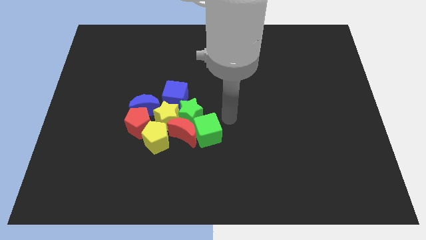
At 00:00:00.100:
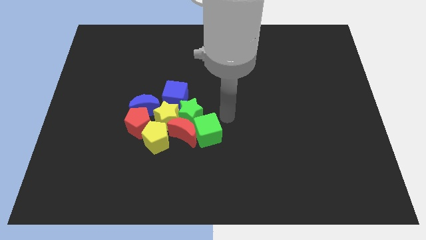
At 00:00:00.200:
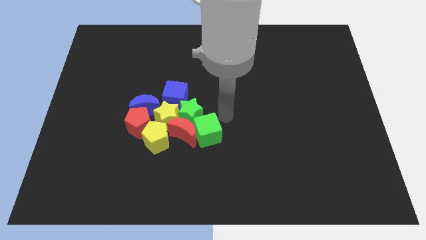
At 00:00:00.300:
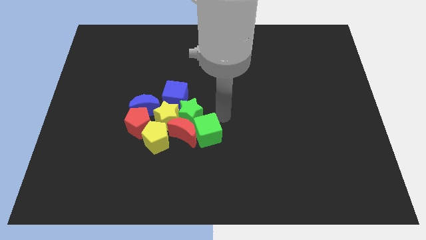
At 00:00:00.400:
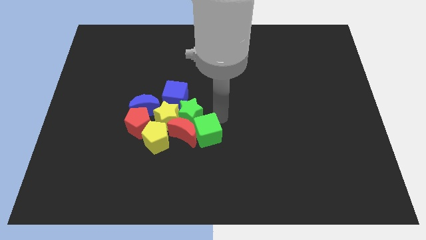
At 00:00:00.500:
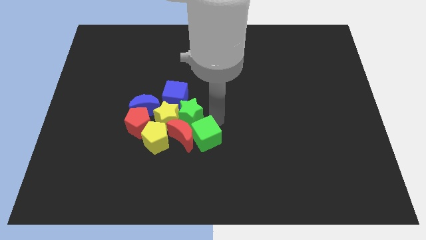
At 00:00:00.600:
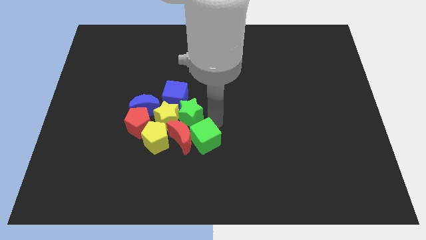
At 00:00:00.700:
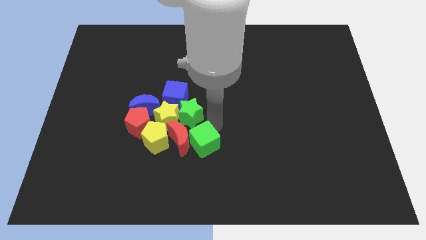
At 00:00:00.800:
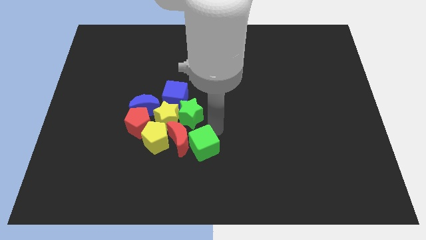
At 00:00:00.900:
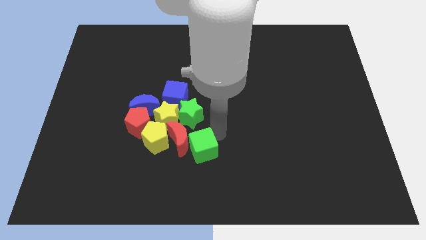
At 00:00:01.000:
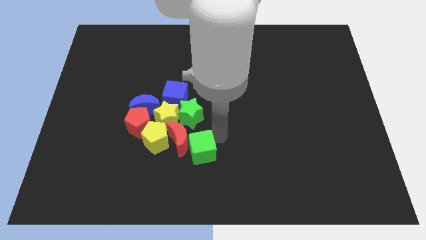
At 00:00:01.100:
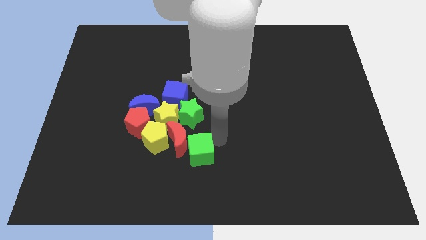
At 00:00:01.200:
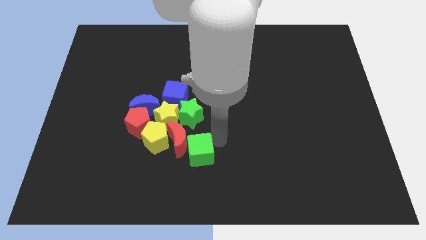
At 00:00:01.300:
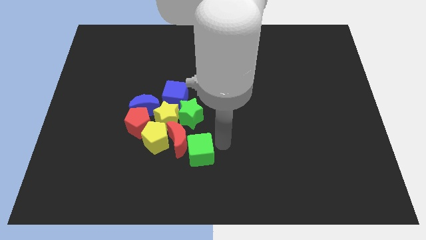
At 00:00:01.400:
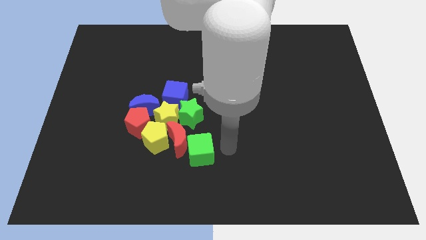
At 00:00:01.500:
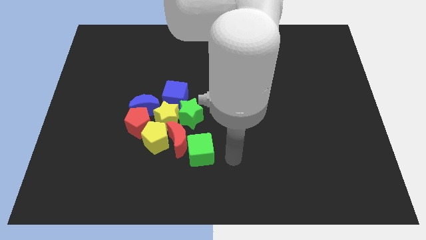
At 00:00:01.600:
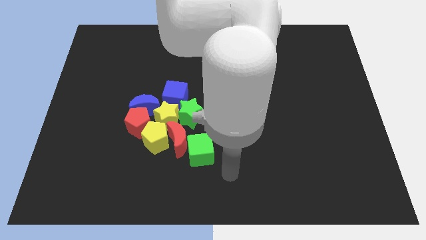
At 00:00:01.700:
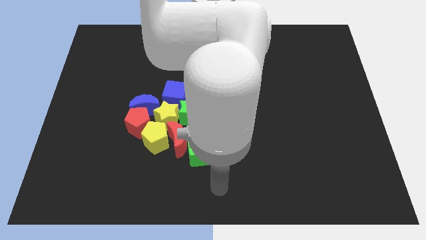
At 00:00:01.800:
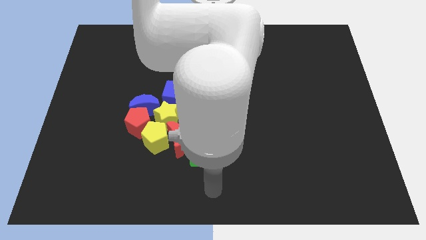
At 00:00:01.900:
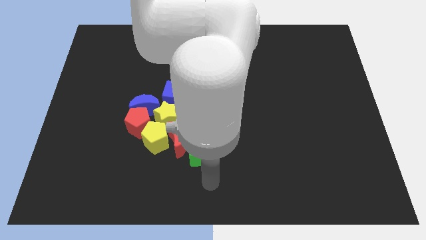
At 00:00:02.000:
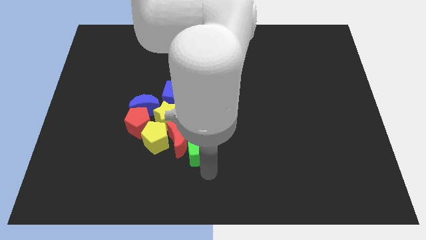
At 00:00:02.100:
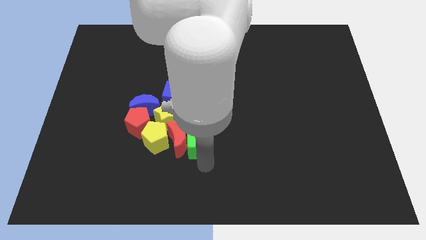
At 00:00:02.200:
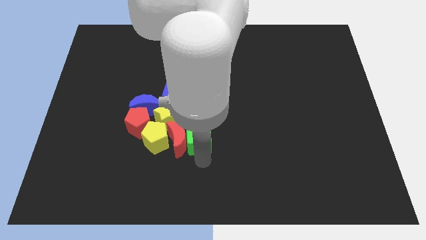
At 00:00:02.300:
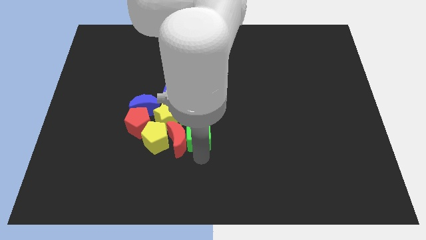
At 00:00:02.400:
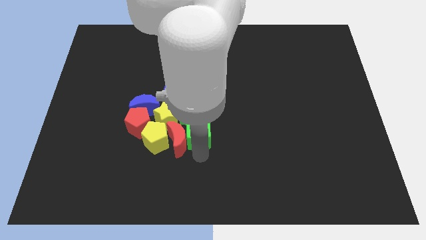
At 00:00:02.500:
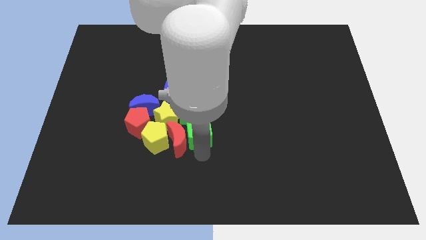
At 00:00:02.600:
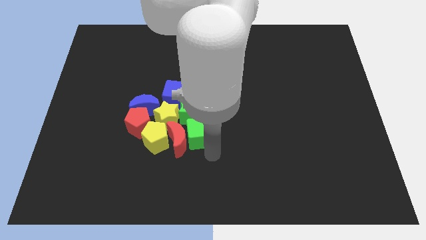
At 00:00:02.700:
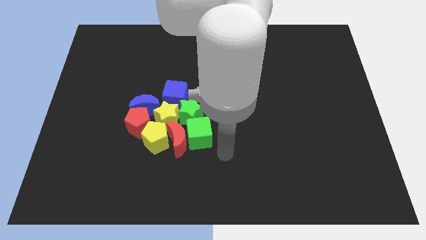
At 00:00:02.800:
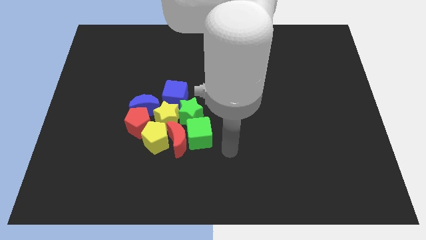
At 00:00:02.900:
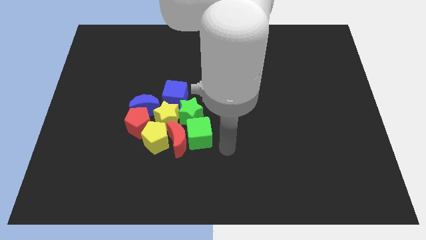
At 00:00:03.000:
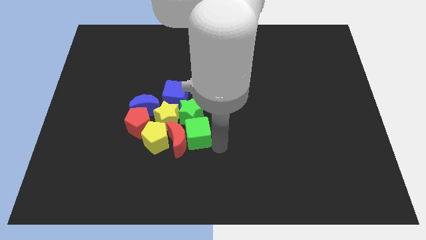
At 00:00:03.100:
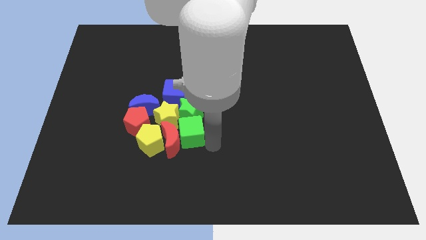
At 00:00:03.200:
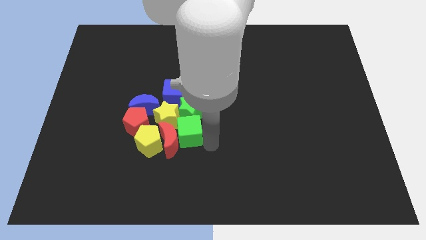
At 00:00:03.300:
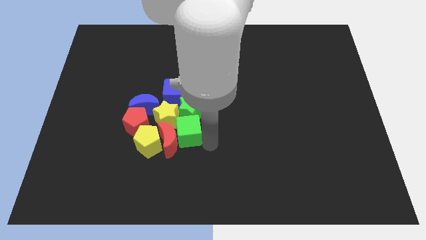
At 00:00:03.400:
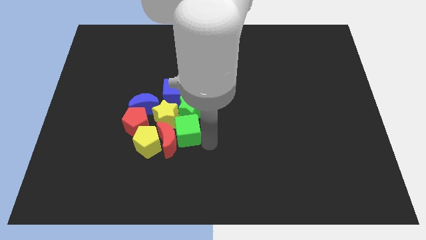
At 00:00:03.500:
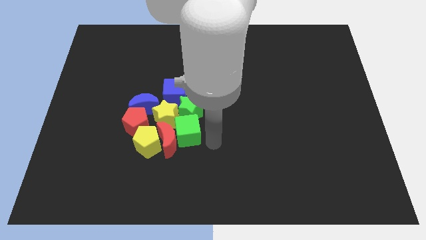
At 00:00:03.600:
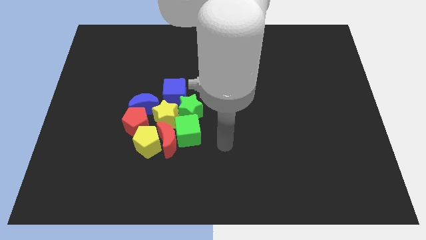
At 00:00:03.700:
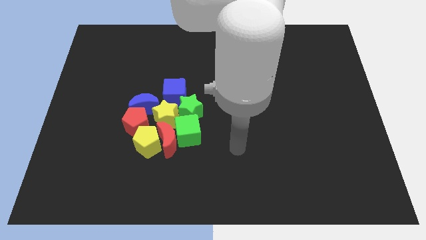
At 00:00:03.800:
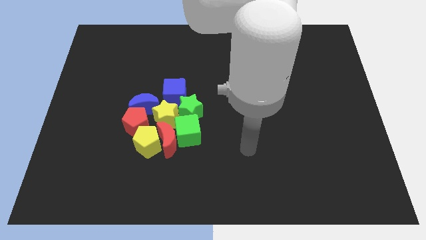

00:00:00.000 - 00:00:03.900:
push the green cube into the group of objects

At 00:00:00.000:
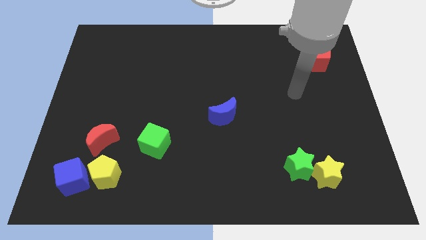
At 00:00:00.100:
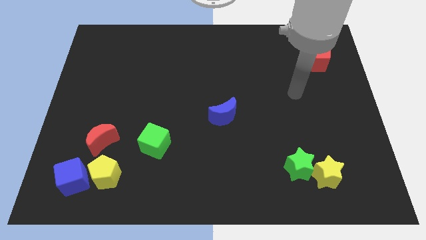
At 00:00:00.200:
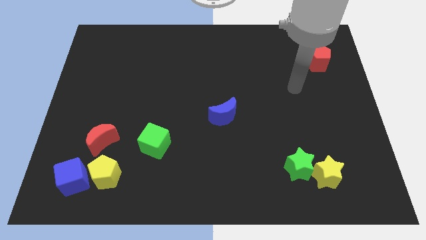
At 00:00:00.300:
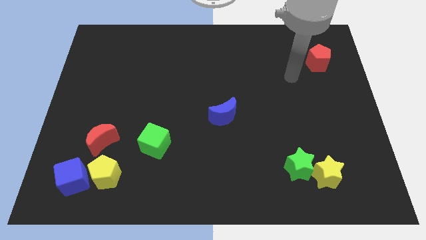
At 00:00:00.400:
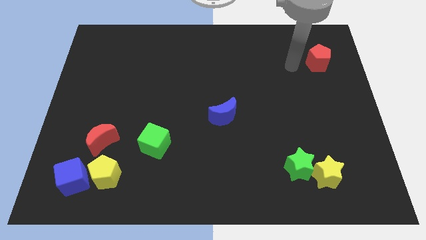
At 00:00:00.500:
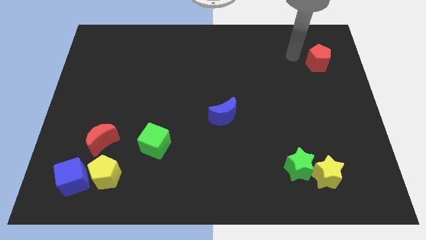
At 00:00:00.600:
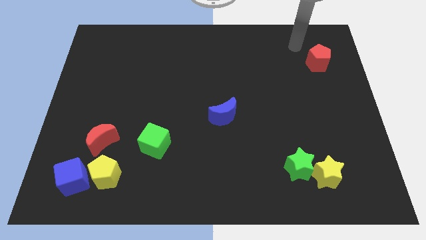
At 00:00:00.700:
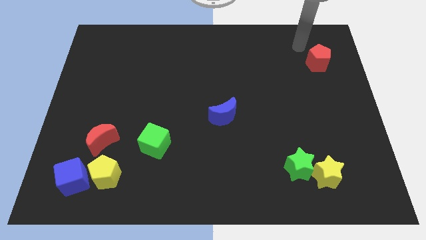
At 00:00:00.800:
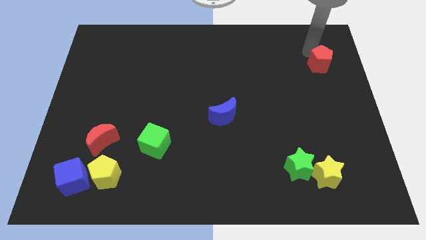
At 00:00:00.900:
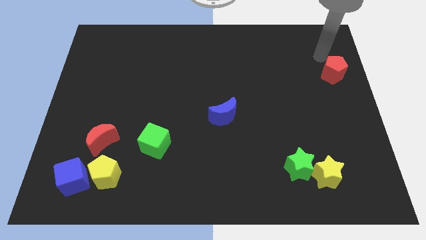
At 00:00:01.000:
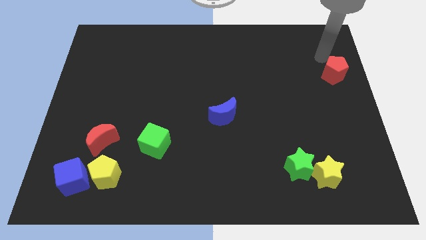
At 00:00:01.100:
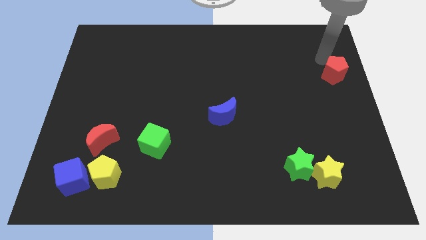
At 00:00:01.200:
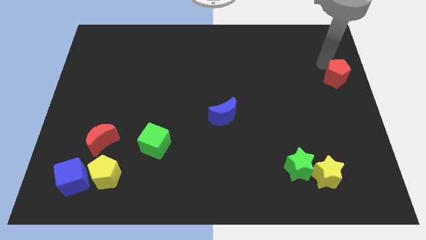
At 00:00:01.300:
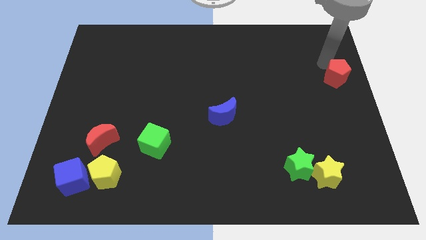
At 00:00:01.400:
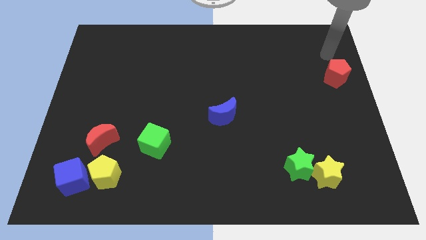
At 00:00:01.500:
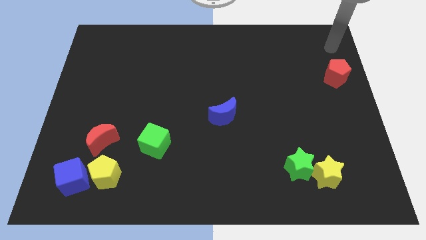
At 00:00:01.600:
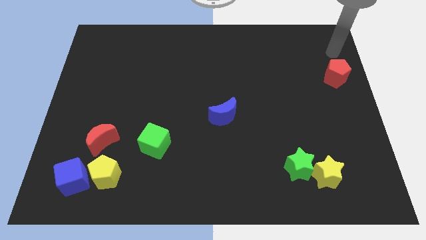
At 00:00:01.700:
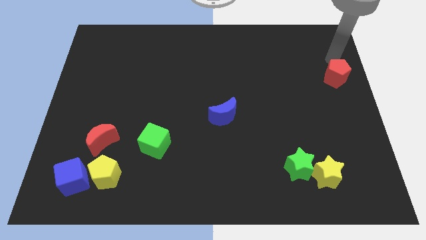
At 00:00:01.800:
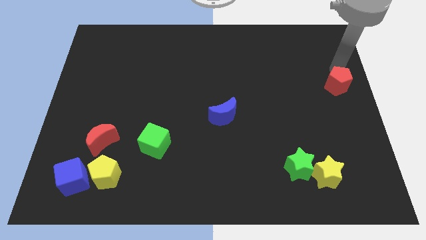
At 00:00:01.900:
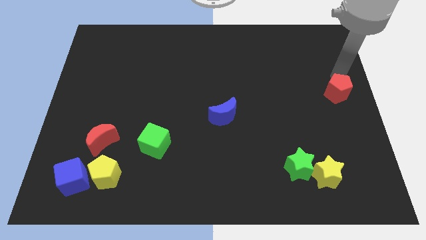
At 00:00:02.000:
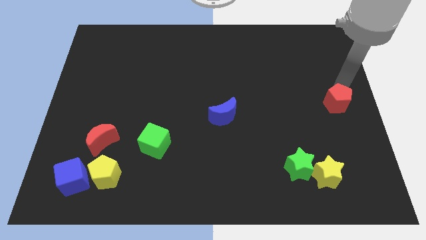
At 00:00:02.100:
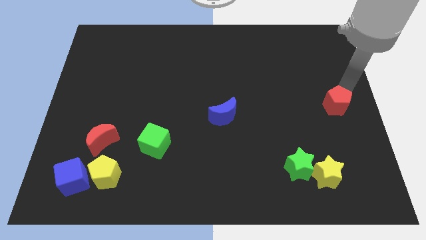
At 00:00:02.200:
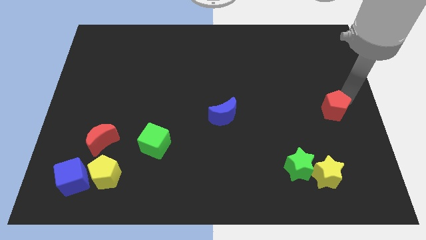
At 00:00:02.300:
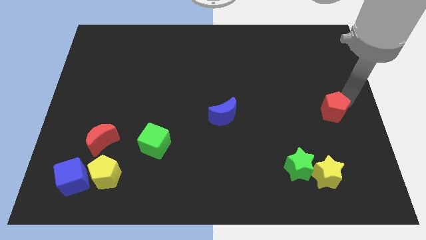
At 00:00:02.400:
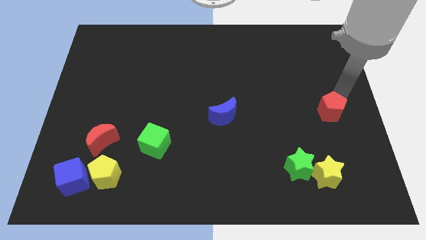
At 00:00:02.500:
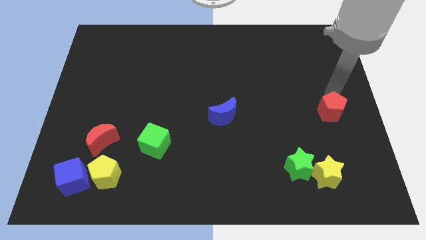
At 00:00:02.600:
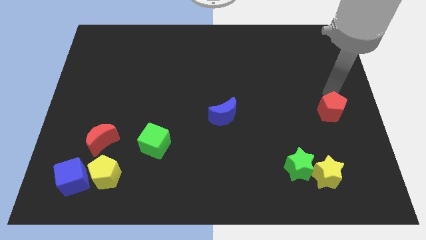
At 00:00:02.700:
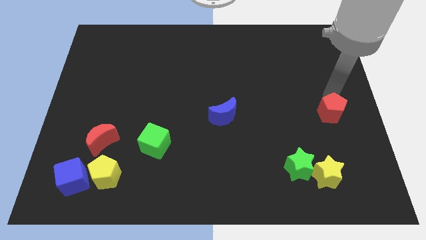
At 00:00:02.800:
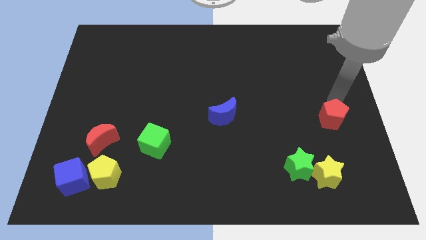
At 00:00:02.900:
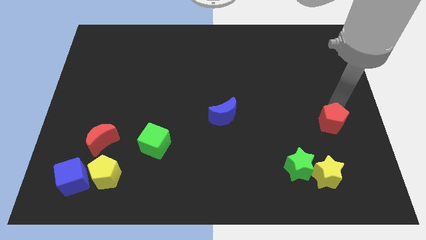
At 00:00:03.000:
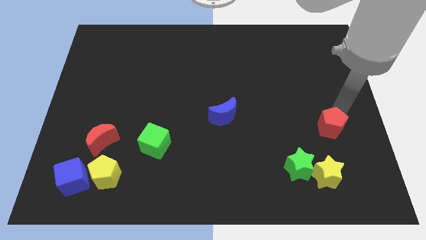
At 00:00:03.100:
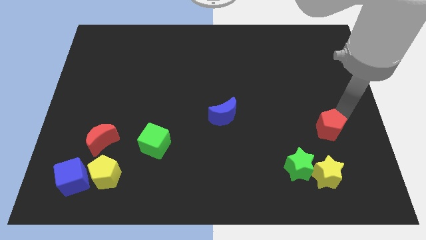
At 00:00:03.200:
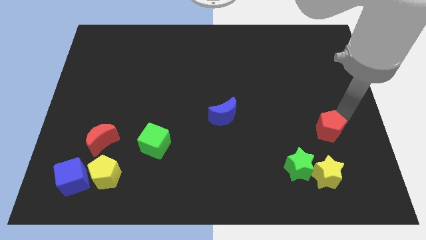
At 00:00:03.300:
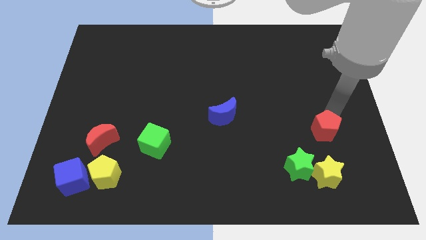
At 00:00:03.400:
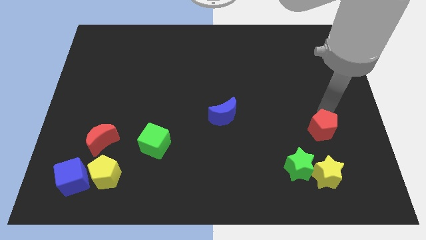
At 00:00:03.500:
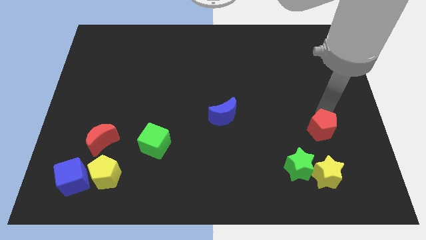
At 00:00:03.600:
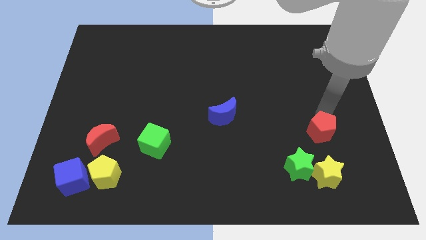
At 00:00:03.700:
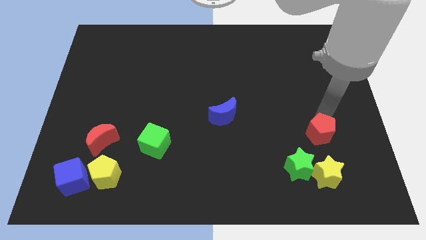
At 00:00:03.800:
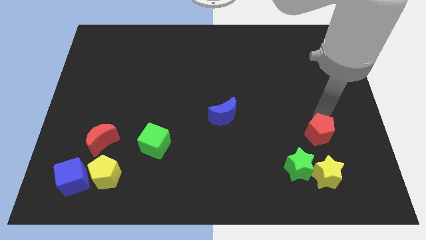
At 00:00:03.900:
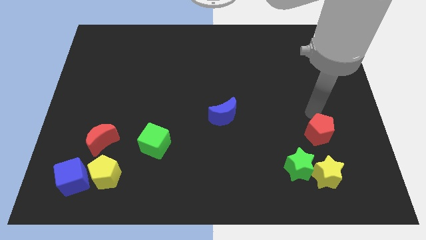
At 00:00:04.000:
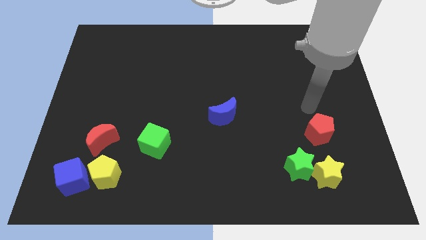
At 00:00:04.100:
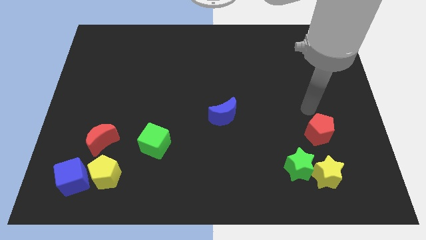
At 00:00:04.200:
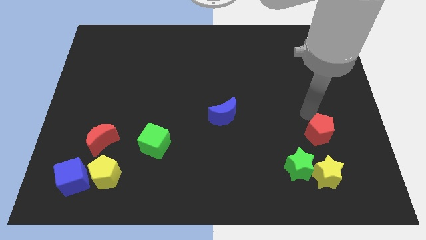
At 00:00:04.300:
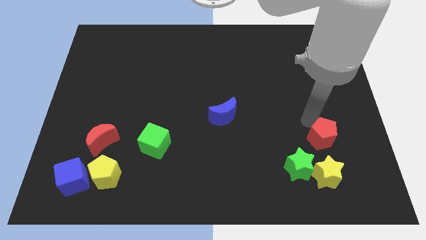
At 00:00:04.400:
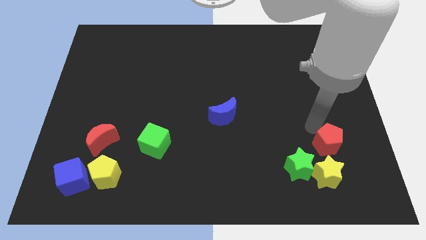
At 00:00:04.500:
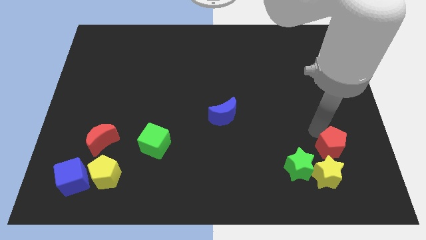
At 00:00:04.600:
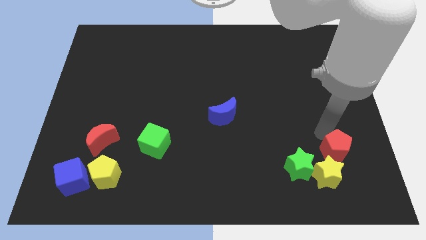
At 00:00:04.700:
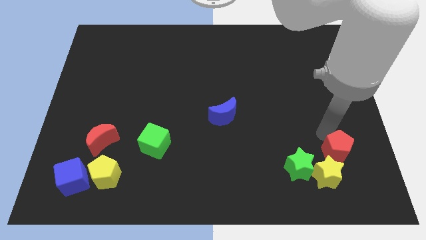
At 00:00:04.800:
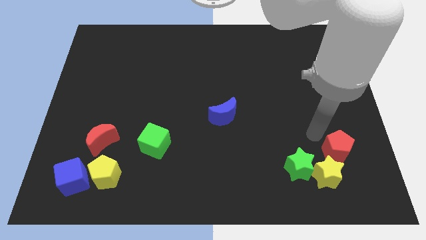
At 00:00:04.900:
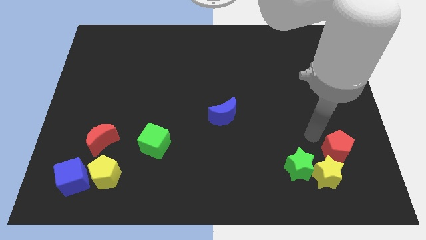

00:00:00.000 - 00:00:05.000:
move the red pentagon towards the yellow star
